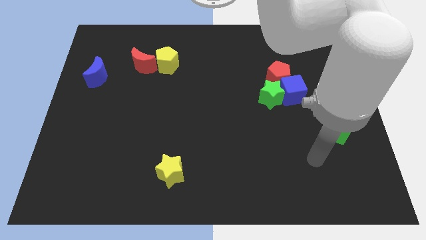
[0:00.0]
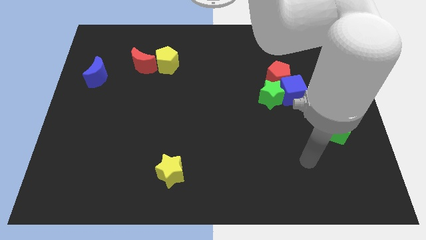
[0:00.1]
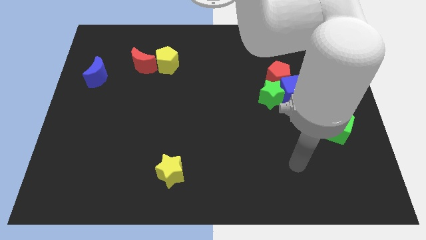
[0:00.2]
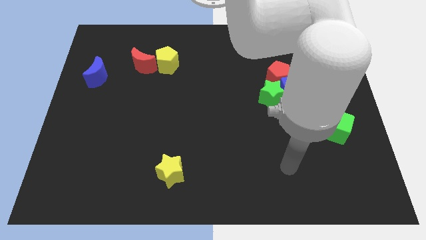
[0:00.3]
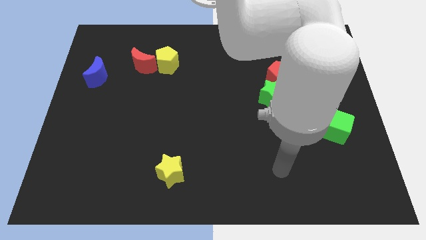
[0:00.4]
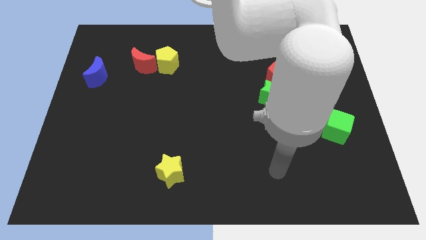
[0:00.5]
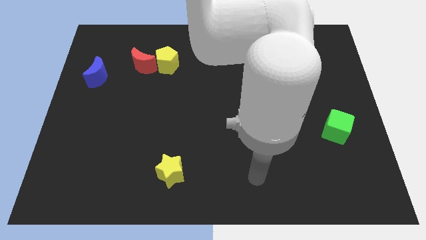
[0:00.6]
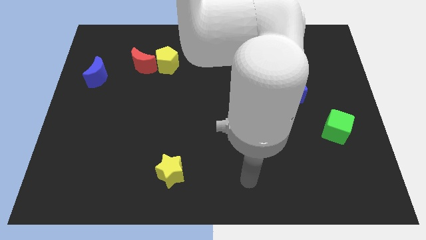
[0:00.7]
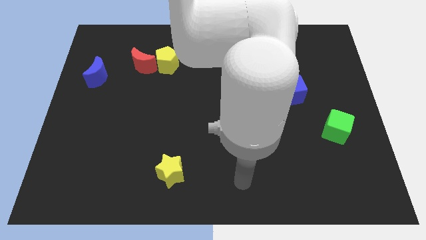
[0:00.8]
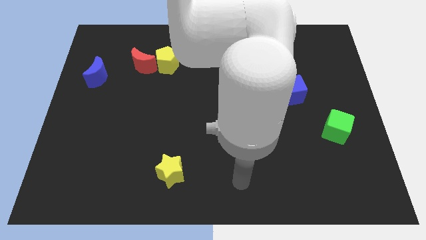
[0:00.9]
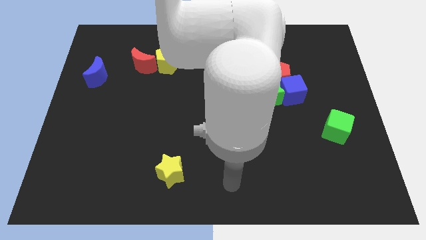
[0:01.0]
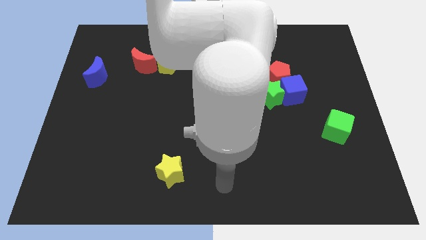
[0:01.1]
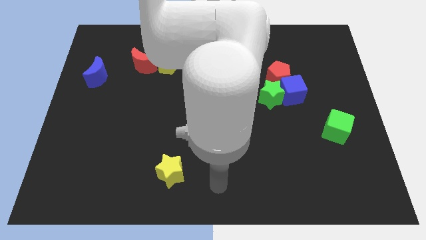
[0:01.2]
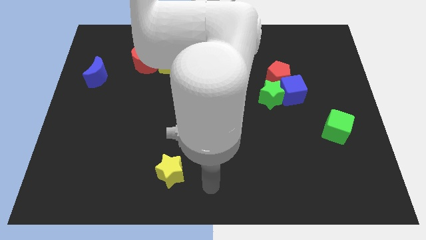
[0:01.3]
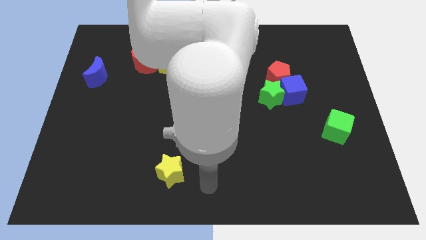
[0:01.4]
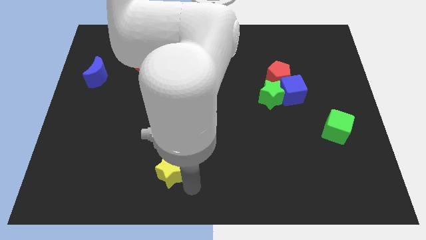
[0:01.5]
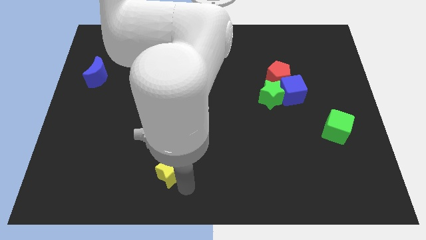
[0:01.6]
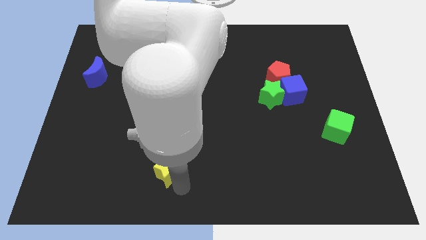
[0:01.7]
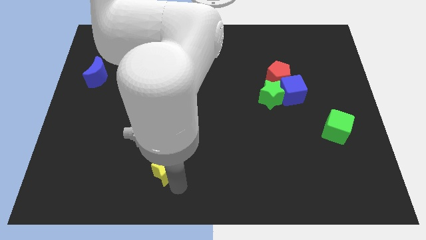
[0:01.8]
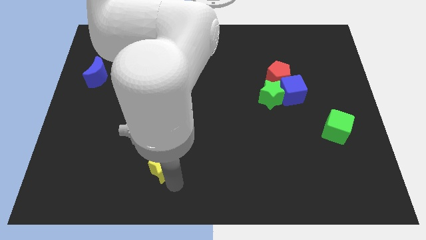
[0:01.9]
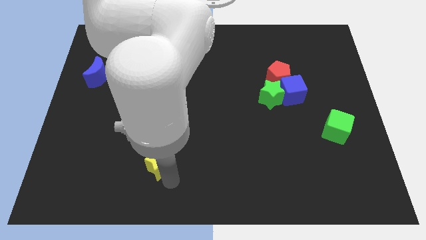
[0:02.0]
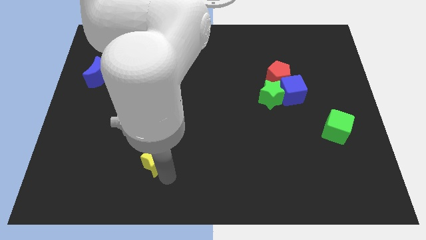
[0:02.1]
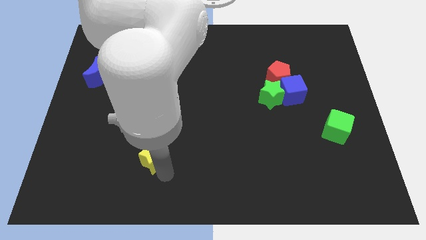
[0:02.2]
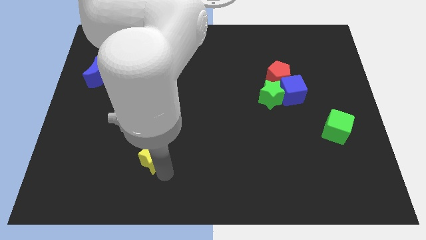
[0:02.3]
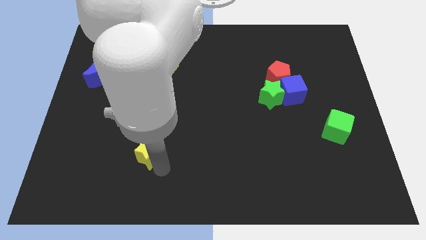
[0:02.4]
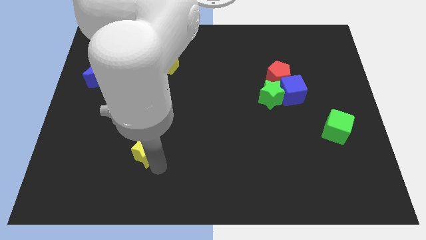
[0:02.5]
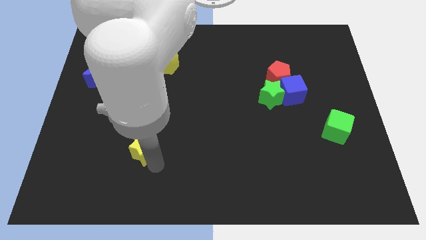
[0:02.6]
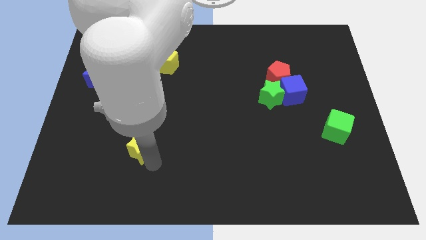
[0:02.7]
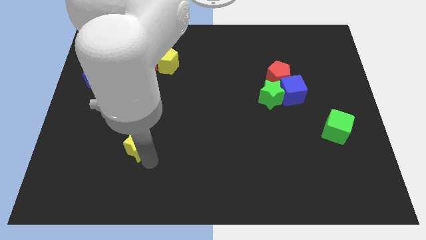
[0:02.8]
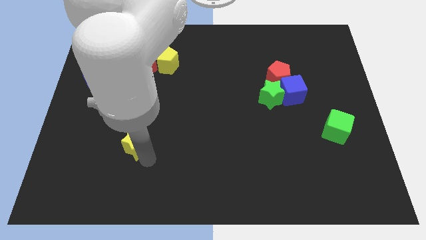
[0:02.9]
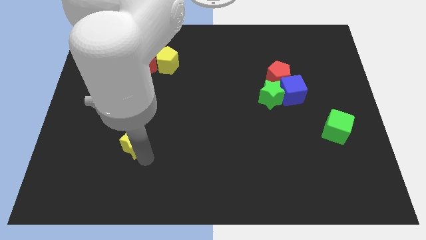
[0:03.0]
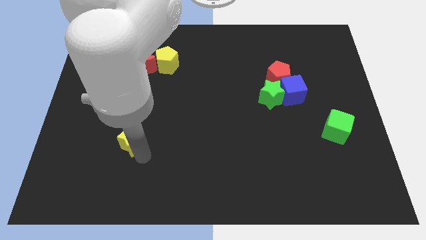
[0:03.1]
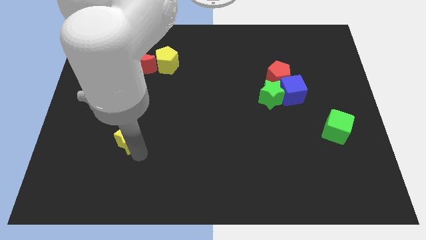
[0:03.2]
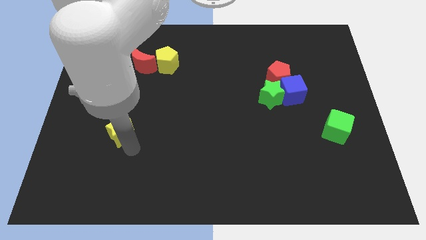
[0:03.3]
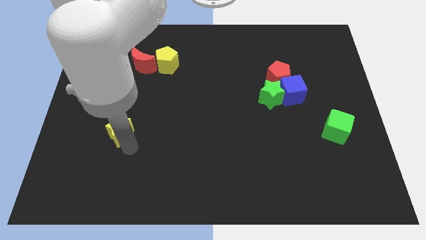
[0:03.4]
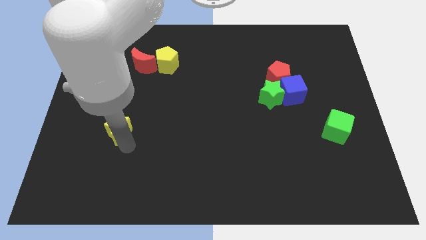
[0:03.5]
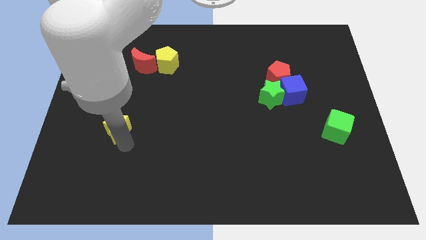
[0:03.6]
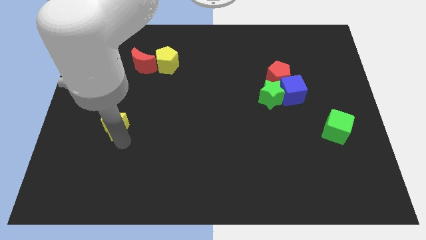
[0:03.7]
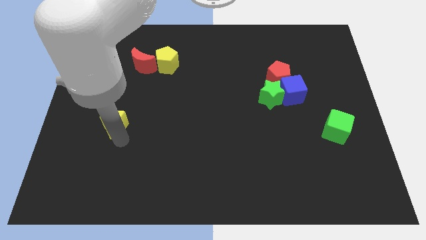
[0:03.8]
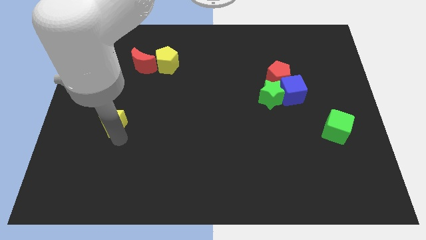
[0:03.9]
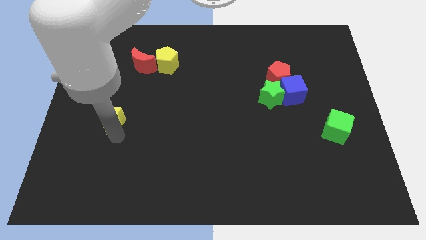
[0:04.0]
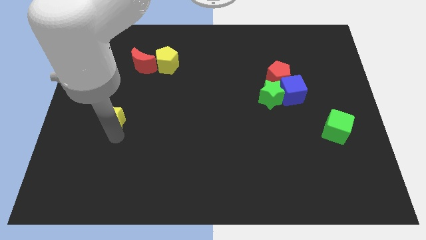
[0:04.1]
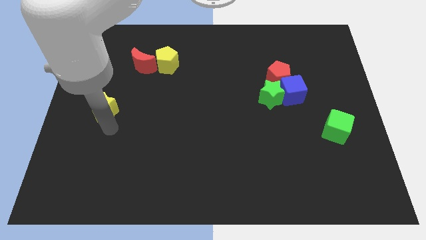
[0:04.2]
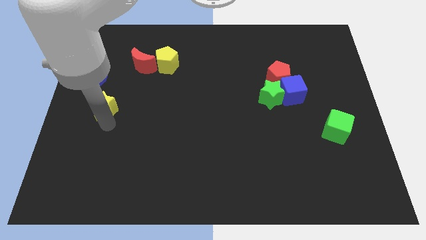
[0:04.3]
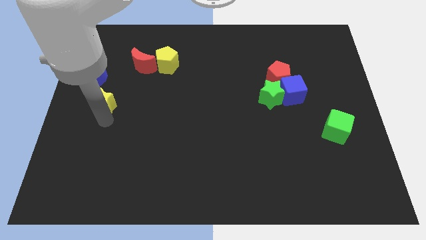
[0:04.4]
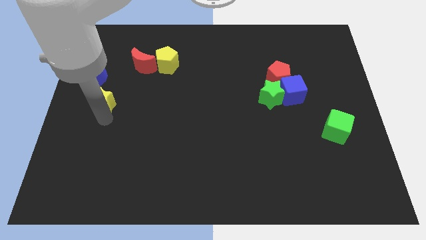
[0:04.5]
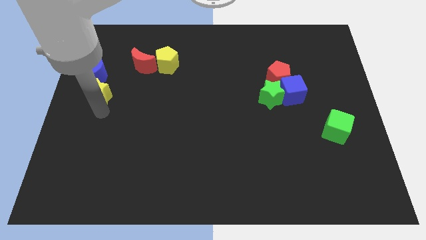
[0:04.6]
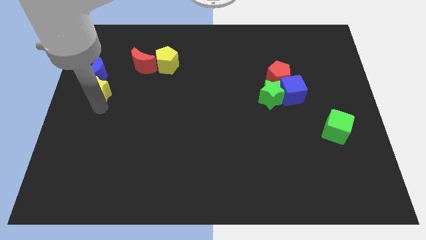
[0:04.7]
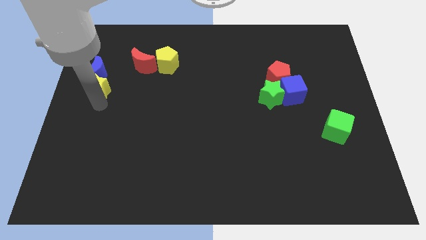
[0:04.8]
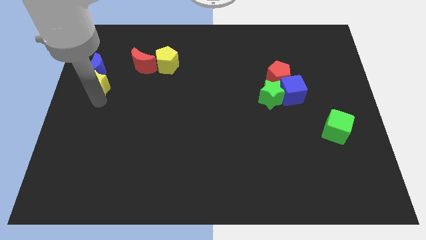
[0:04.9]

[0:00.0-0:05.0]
put the yellow star to the blue moon

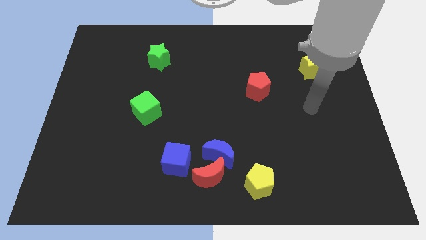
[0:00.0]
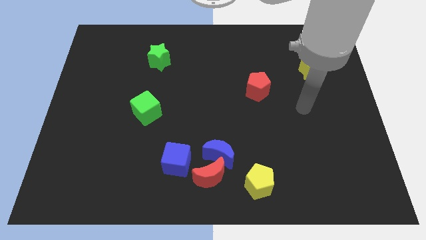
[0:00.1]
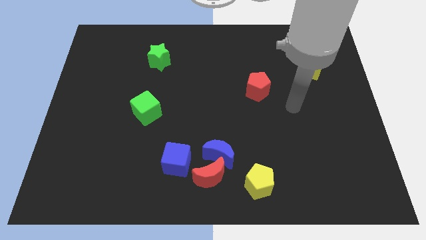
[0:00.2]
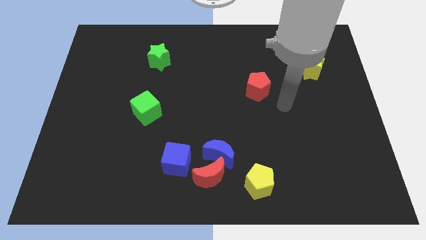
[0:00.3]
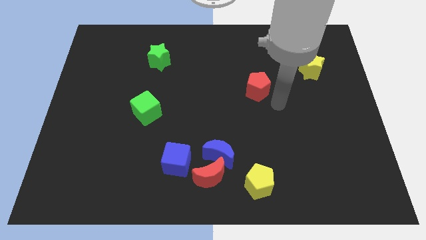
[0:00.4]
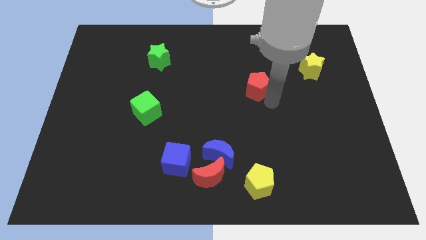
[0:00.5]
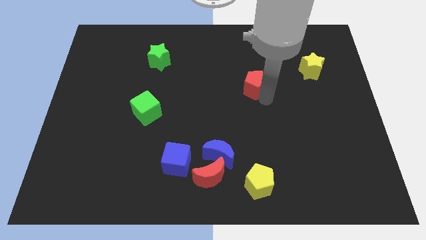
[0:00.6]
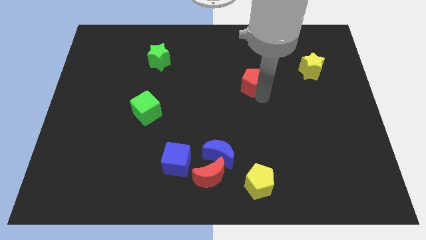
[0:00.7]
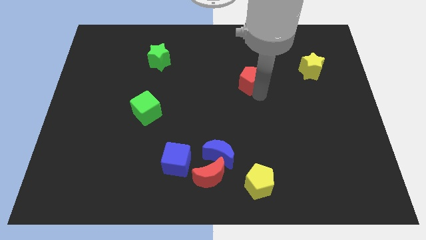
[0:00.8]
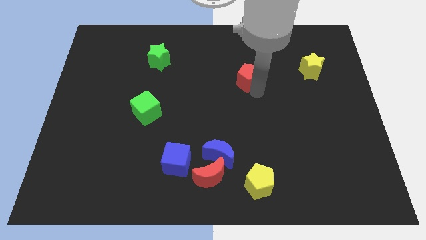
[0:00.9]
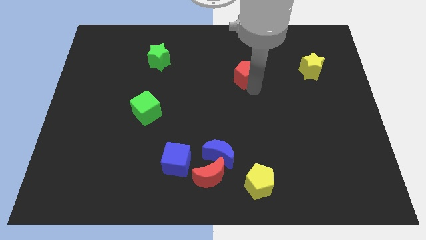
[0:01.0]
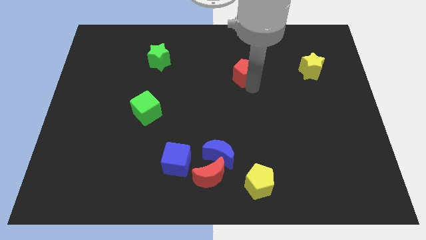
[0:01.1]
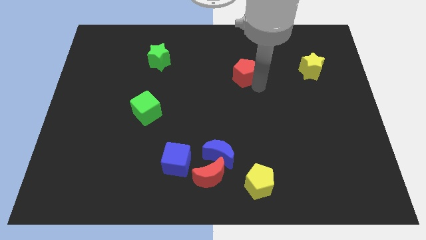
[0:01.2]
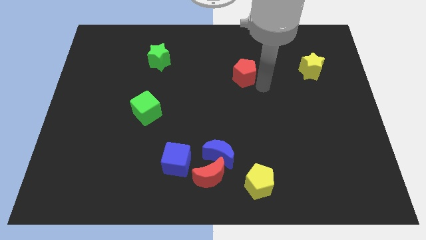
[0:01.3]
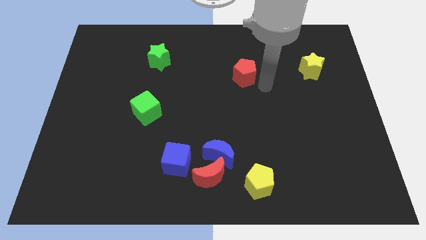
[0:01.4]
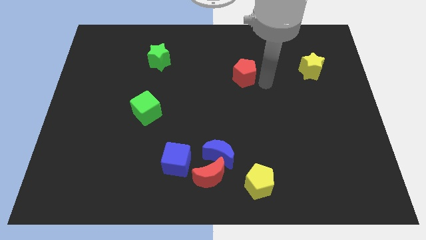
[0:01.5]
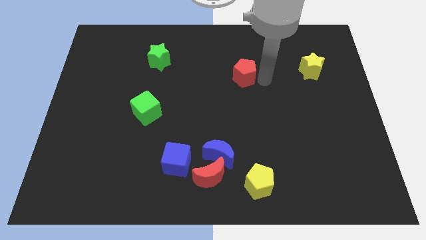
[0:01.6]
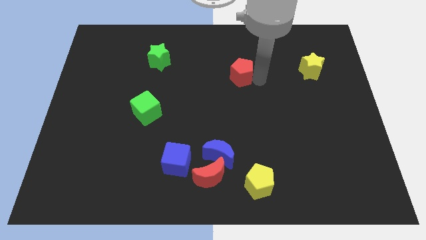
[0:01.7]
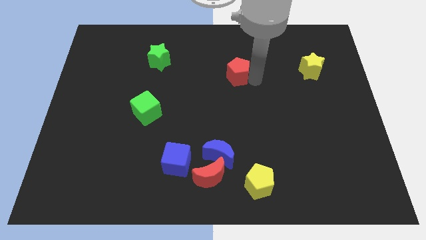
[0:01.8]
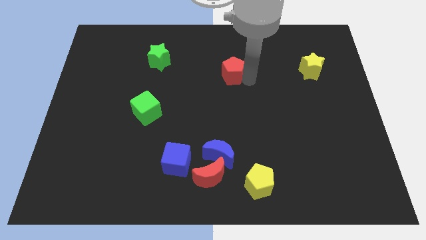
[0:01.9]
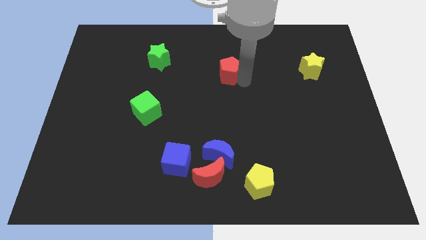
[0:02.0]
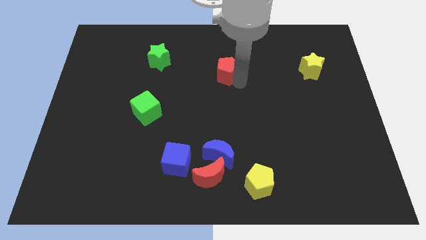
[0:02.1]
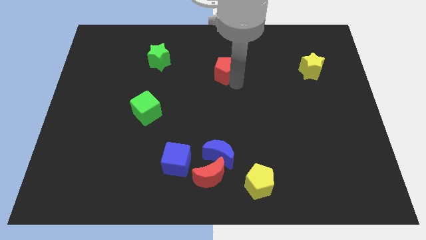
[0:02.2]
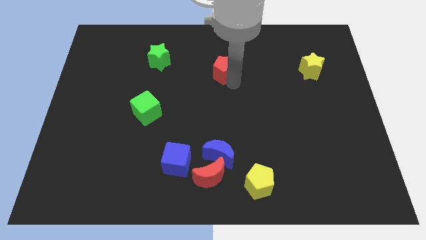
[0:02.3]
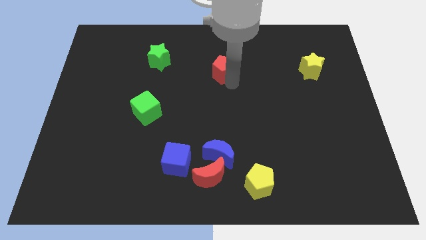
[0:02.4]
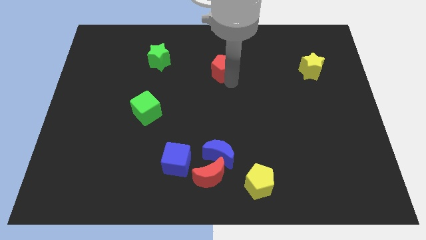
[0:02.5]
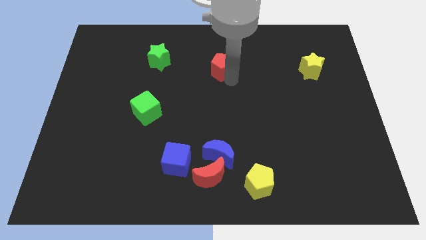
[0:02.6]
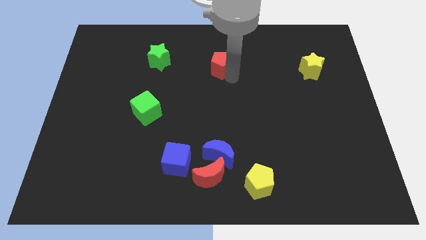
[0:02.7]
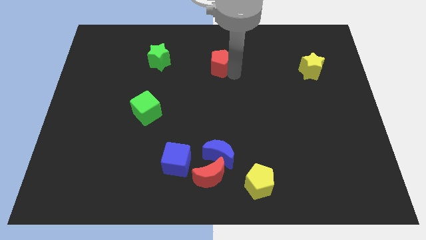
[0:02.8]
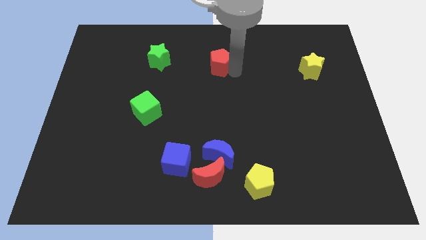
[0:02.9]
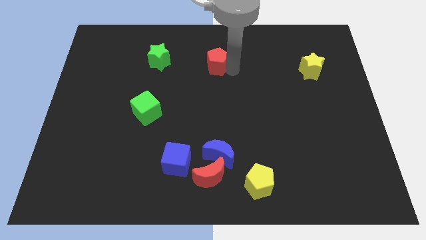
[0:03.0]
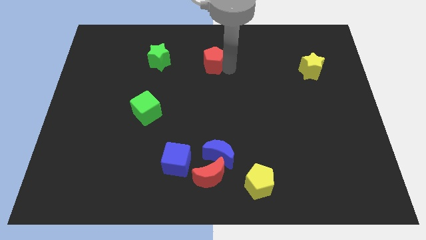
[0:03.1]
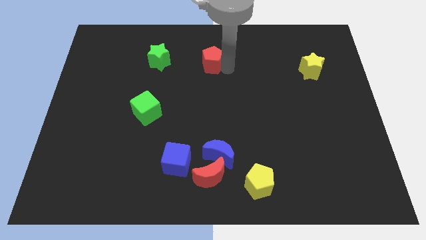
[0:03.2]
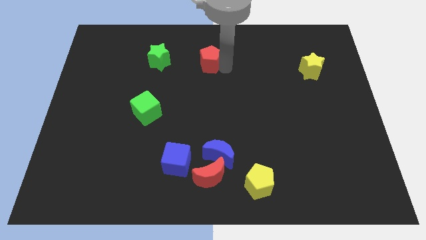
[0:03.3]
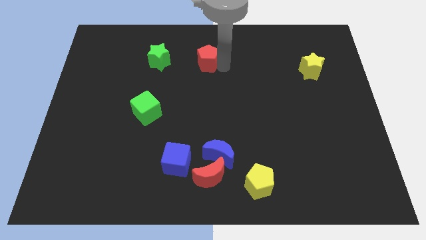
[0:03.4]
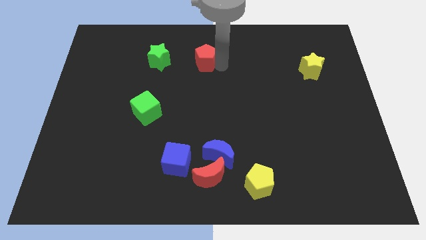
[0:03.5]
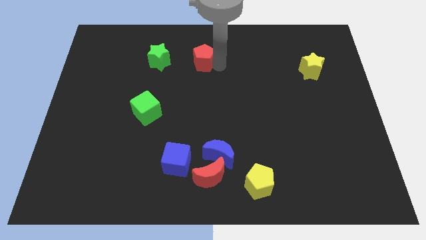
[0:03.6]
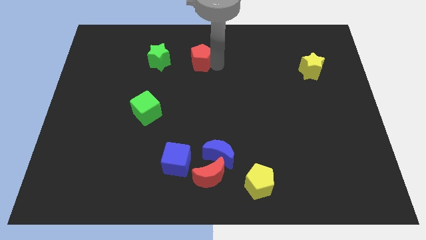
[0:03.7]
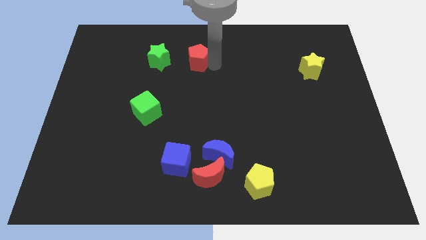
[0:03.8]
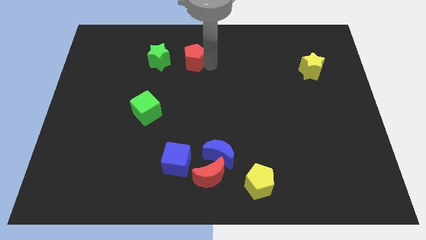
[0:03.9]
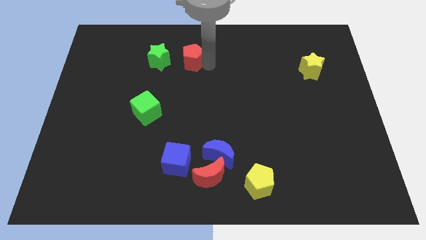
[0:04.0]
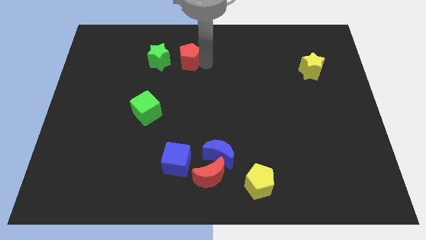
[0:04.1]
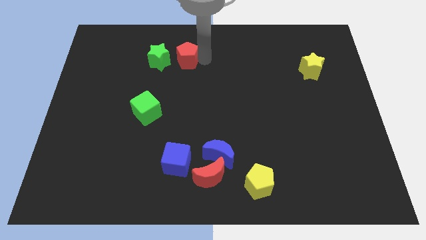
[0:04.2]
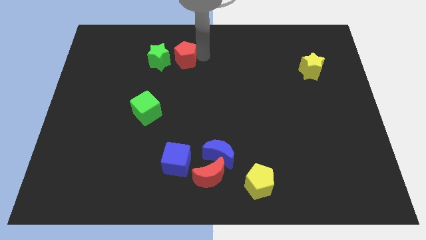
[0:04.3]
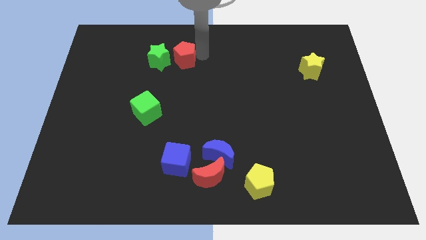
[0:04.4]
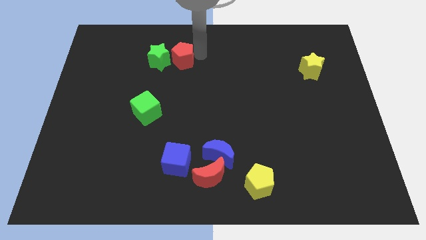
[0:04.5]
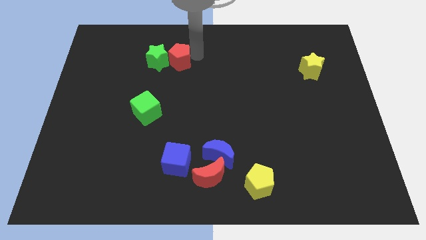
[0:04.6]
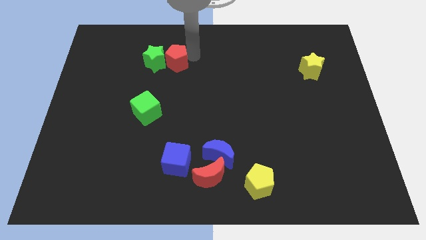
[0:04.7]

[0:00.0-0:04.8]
slide the red pentagon to the green star
